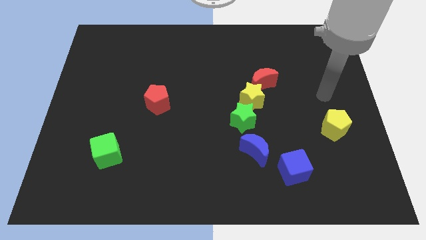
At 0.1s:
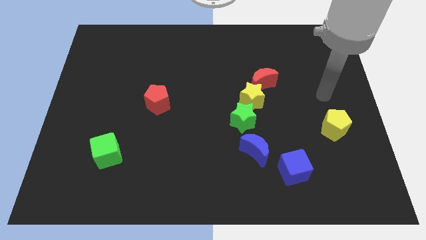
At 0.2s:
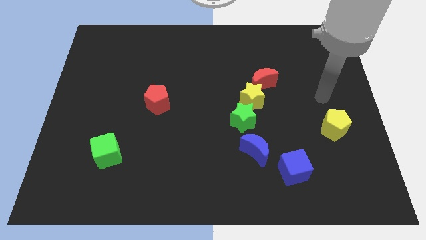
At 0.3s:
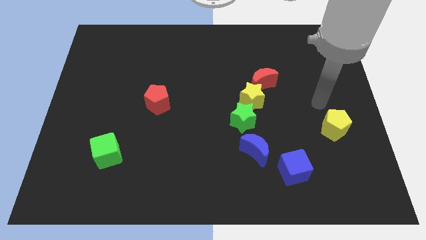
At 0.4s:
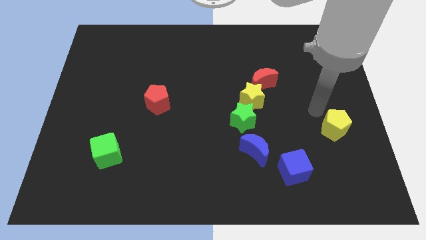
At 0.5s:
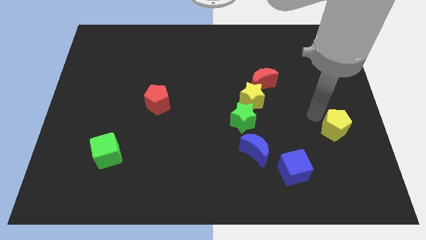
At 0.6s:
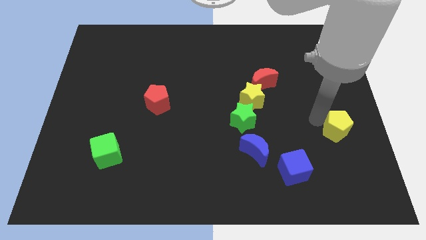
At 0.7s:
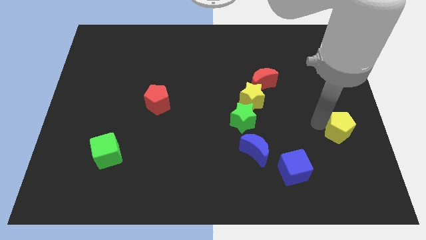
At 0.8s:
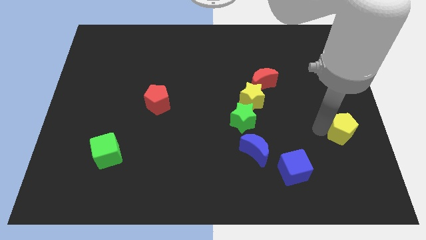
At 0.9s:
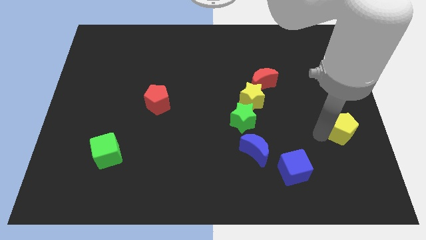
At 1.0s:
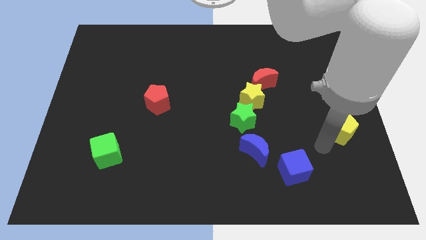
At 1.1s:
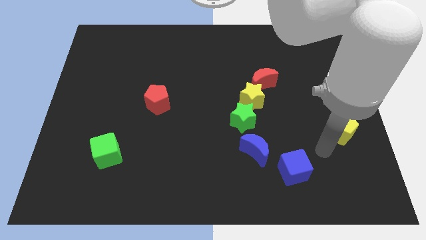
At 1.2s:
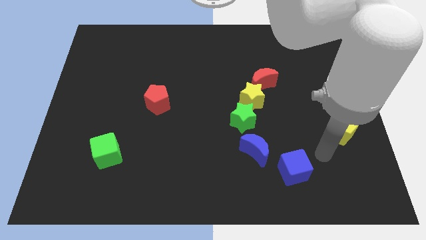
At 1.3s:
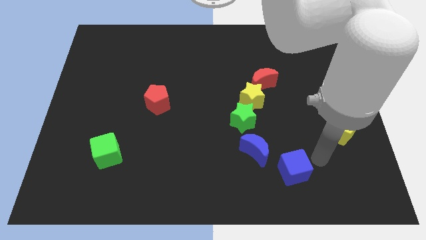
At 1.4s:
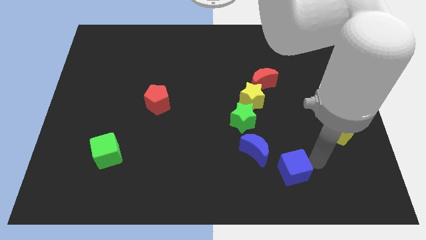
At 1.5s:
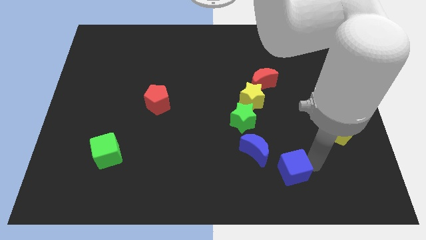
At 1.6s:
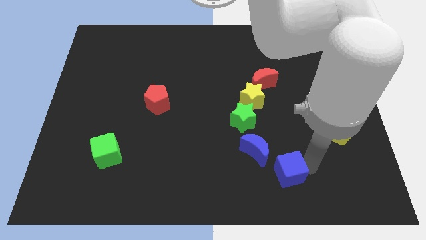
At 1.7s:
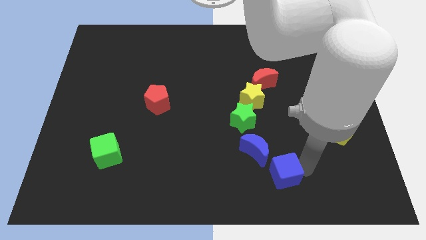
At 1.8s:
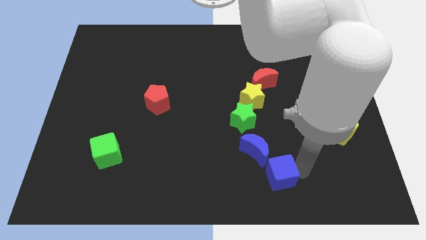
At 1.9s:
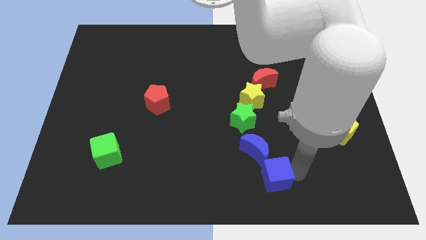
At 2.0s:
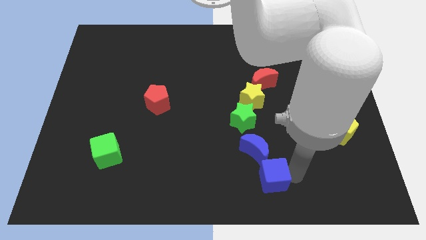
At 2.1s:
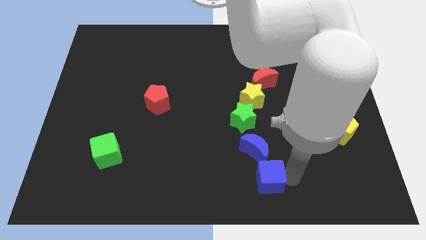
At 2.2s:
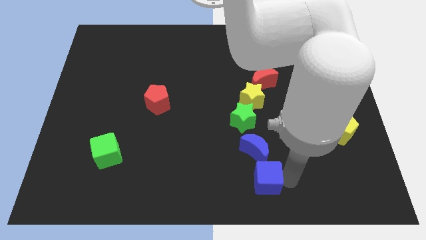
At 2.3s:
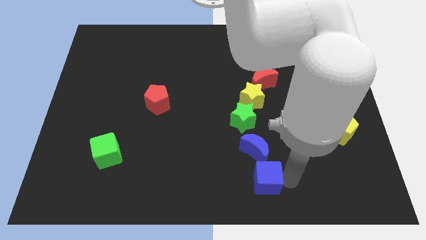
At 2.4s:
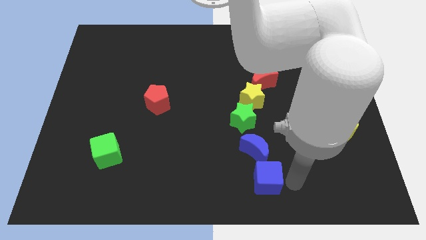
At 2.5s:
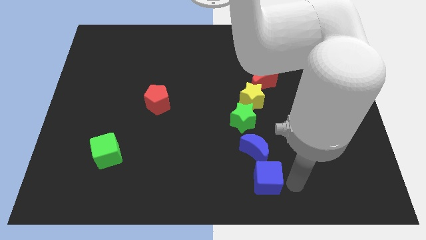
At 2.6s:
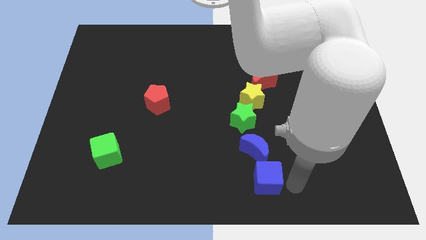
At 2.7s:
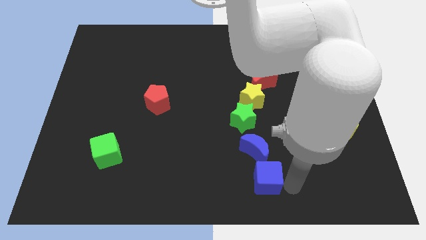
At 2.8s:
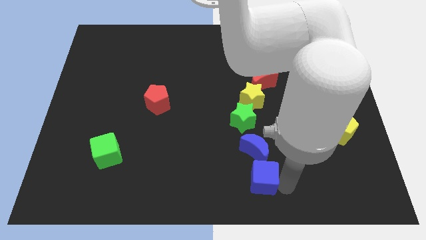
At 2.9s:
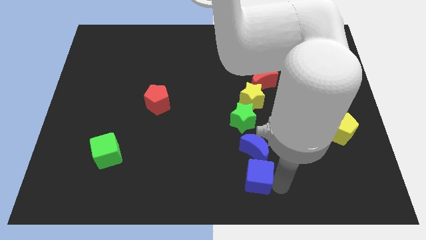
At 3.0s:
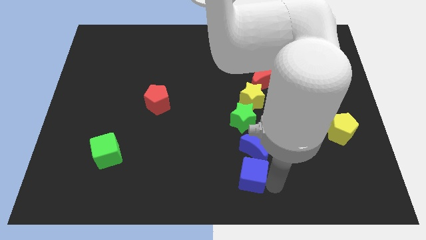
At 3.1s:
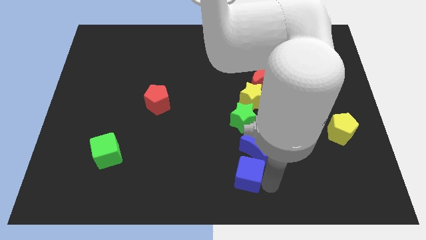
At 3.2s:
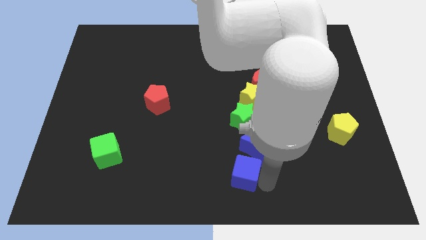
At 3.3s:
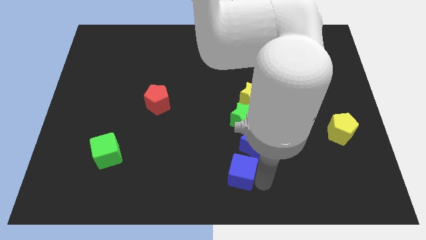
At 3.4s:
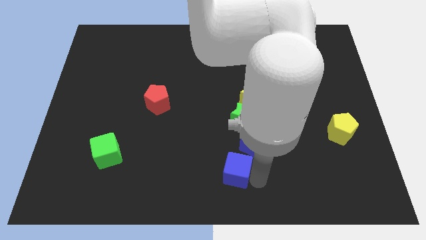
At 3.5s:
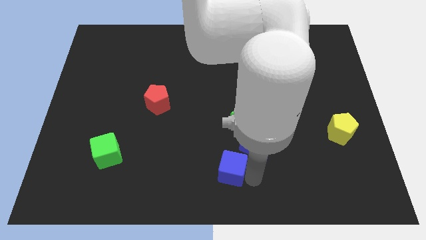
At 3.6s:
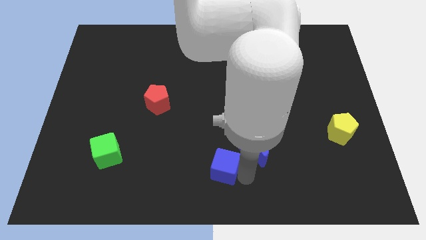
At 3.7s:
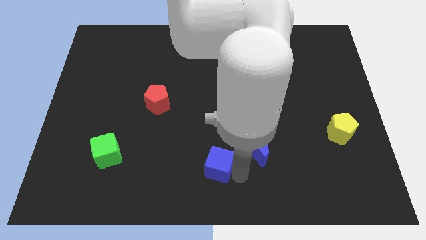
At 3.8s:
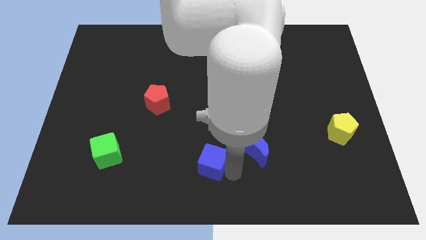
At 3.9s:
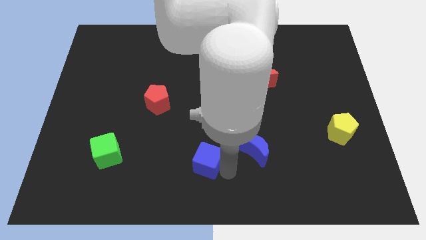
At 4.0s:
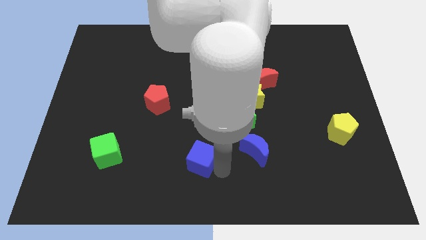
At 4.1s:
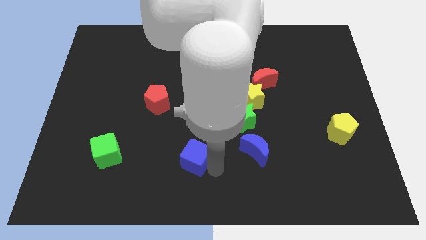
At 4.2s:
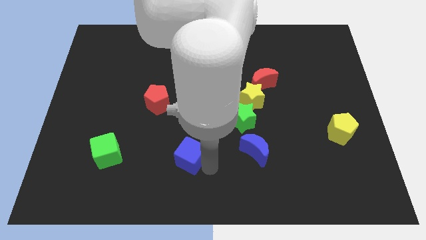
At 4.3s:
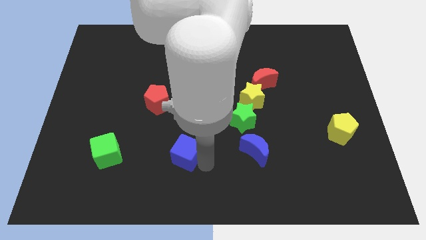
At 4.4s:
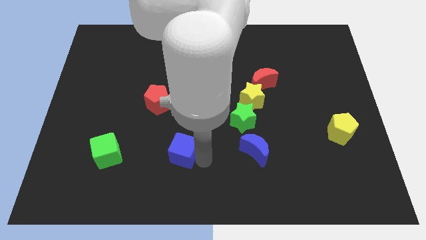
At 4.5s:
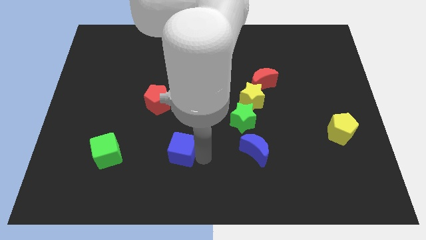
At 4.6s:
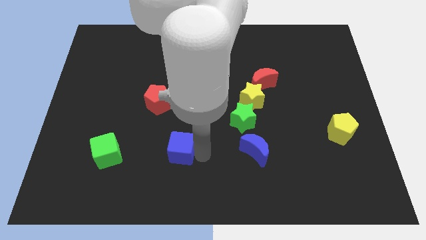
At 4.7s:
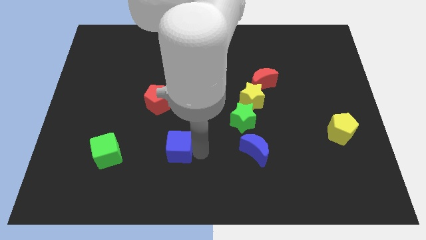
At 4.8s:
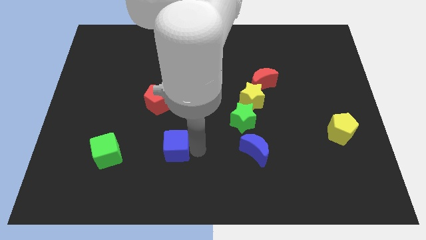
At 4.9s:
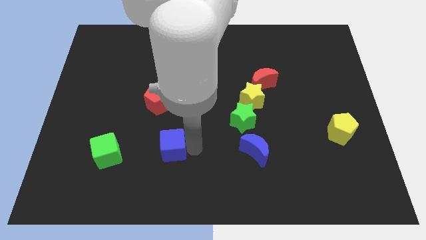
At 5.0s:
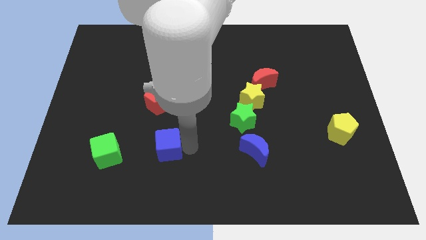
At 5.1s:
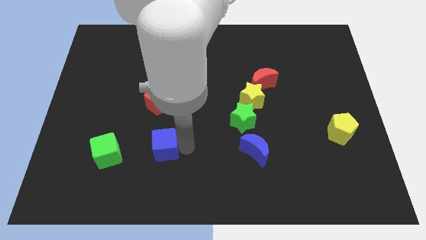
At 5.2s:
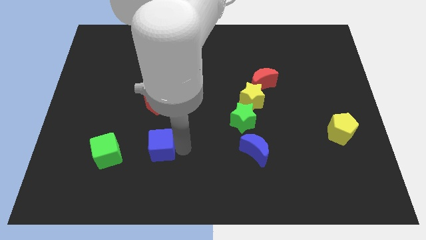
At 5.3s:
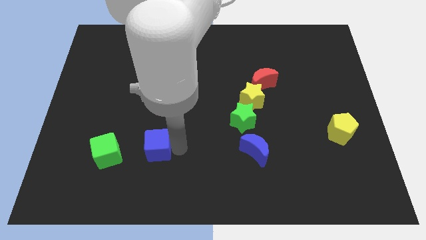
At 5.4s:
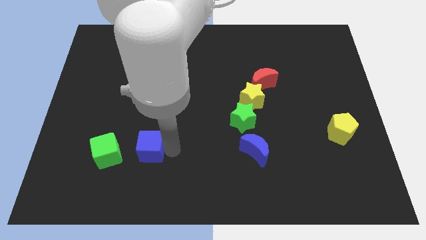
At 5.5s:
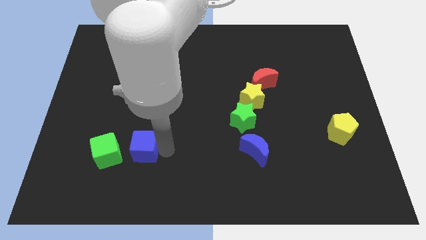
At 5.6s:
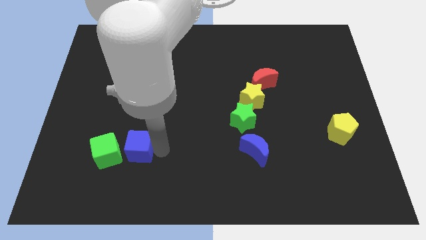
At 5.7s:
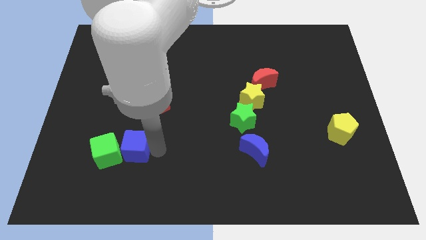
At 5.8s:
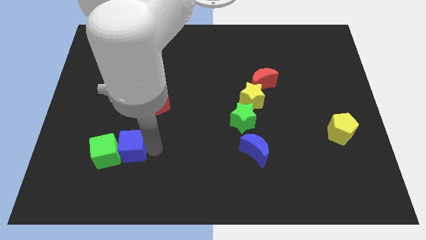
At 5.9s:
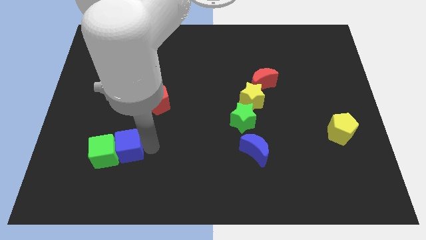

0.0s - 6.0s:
slide the blue cube towards the green cube

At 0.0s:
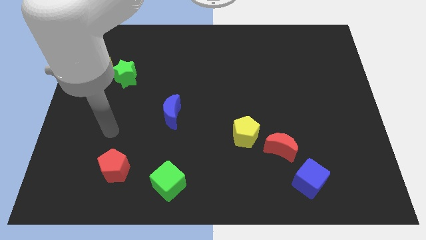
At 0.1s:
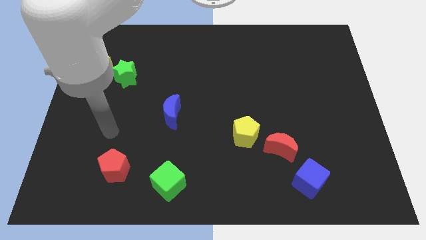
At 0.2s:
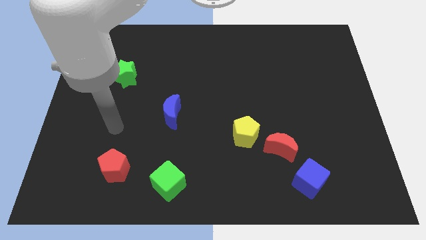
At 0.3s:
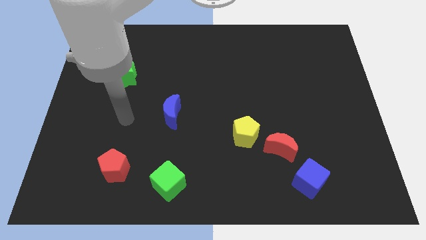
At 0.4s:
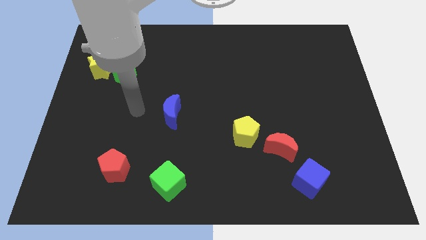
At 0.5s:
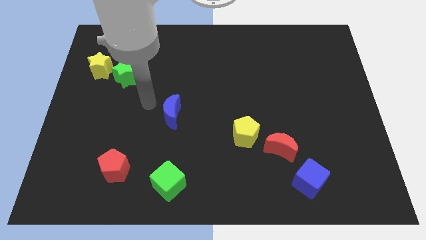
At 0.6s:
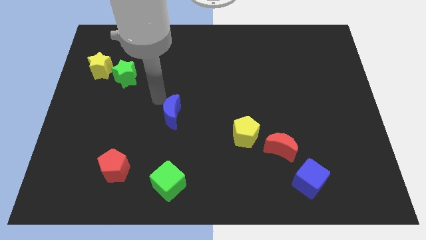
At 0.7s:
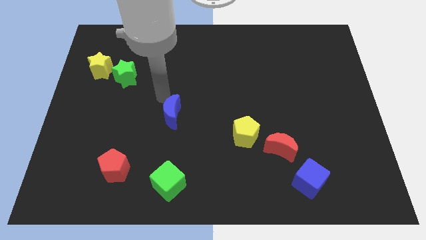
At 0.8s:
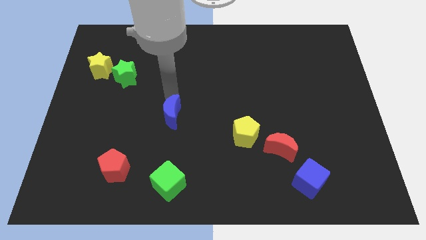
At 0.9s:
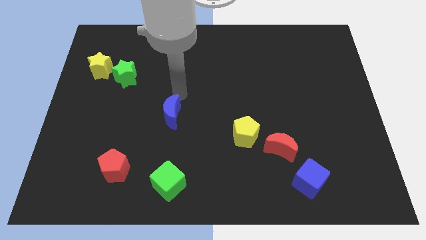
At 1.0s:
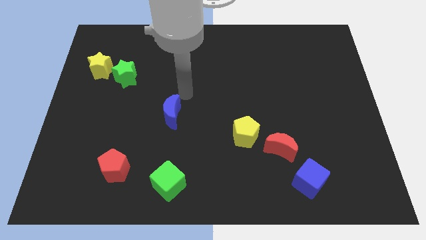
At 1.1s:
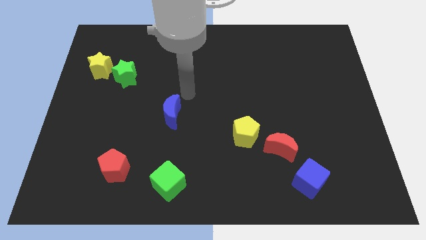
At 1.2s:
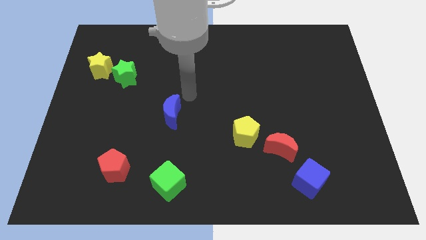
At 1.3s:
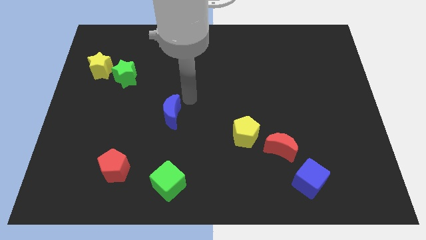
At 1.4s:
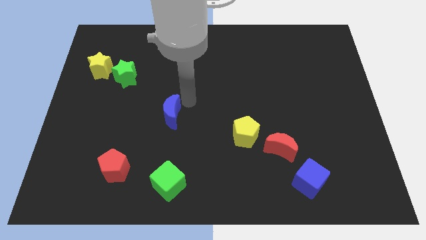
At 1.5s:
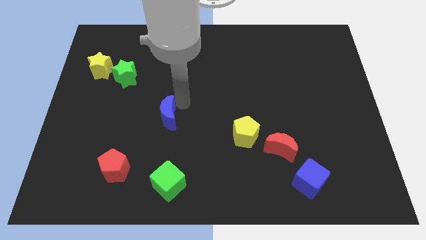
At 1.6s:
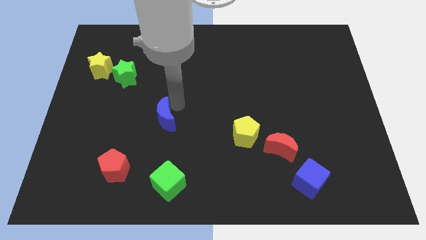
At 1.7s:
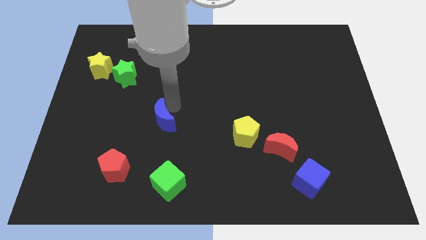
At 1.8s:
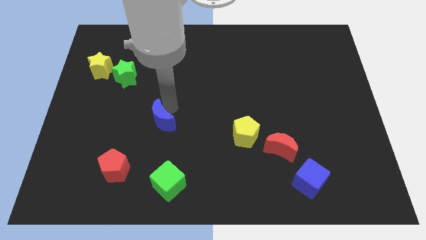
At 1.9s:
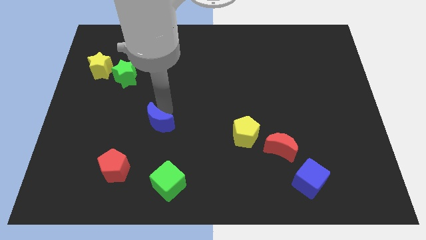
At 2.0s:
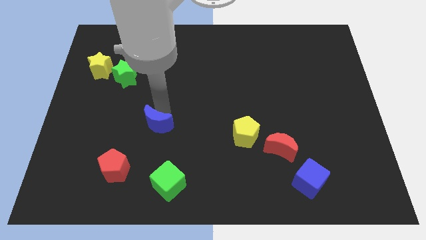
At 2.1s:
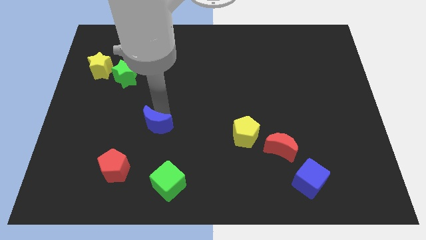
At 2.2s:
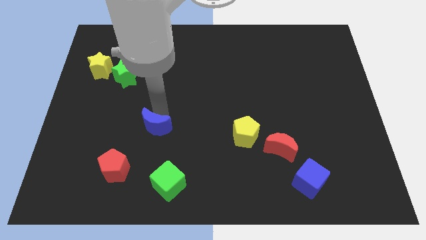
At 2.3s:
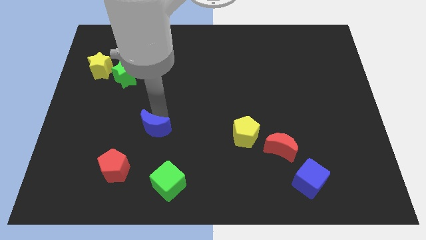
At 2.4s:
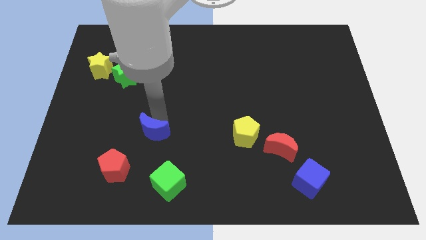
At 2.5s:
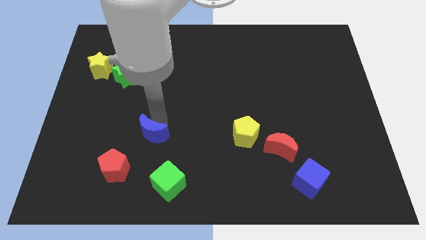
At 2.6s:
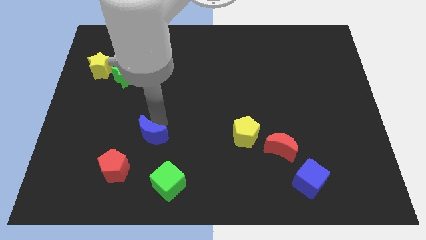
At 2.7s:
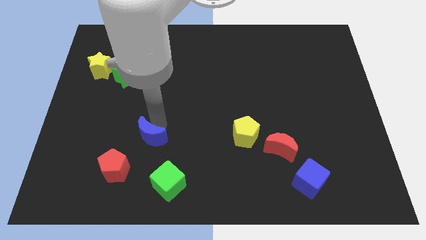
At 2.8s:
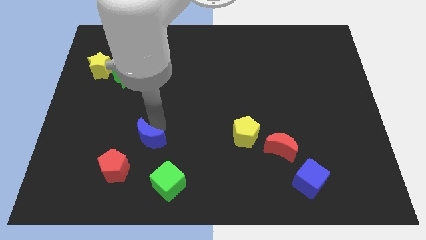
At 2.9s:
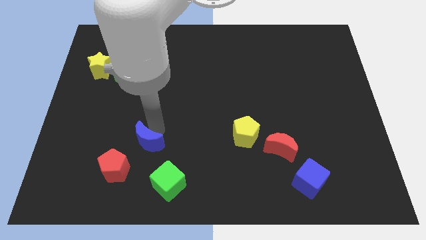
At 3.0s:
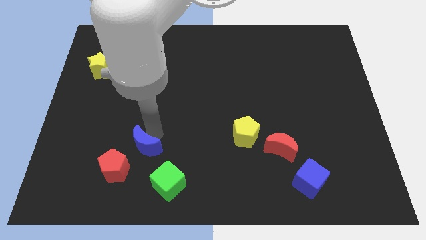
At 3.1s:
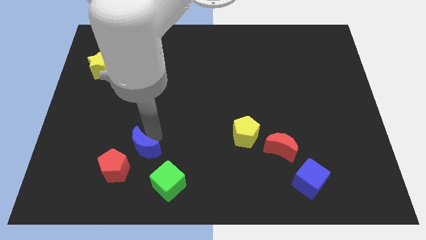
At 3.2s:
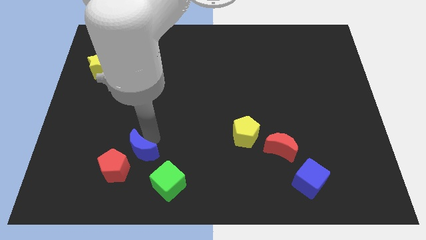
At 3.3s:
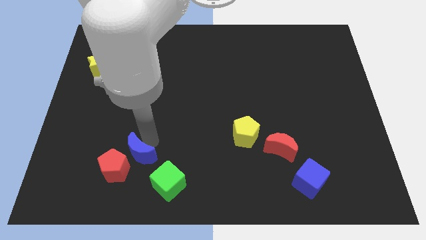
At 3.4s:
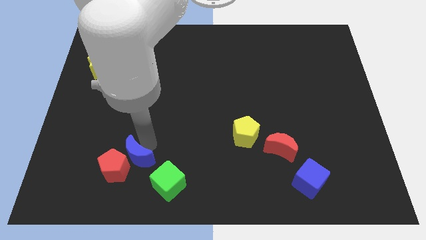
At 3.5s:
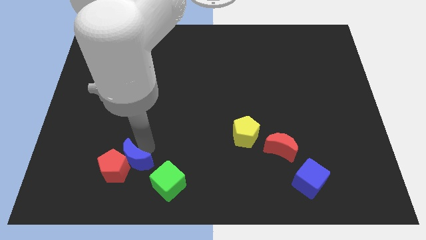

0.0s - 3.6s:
push the blue moon close to the red pentagon
